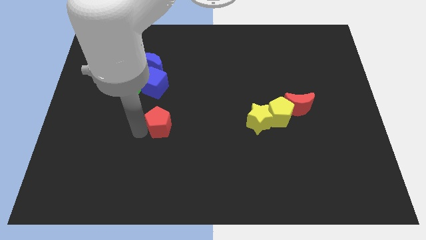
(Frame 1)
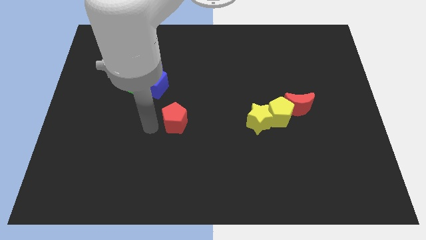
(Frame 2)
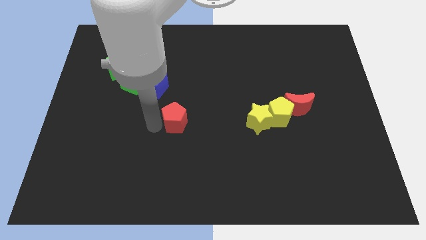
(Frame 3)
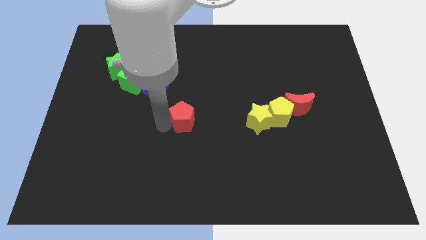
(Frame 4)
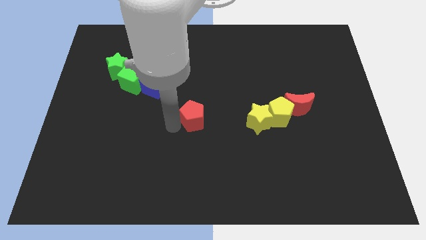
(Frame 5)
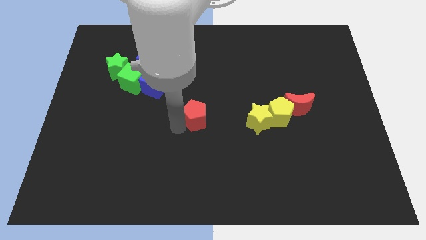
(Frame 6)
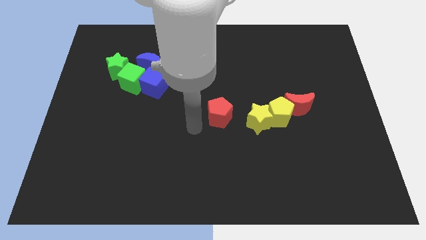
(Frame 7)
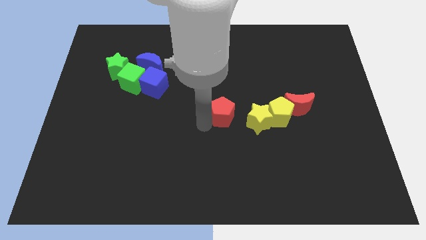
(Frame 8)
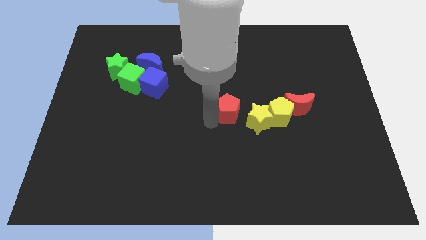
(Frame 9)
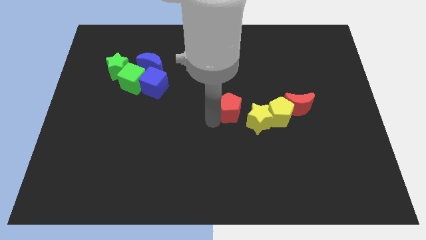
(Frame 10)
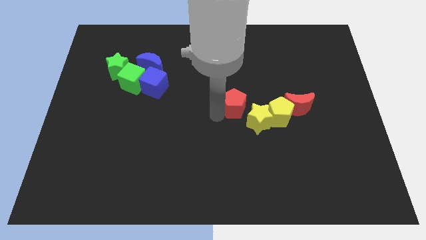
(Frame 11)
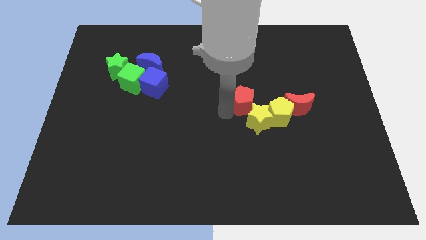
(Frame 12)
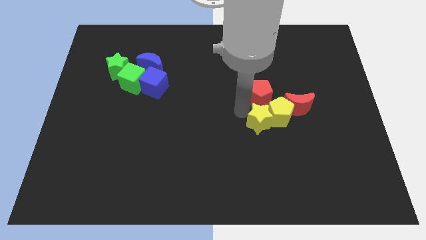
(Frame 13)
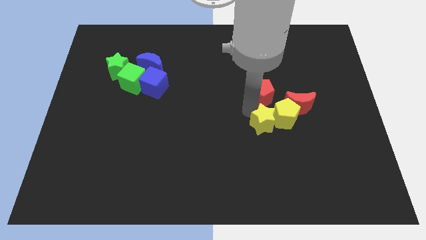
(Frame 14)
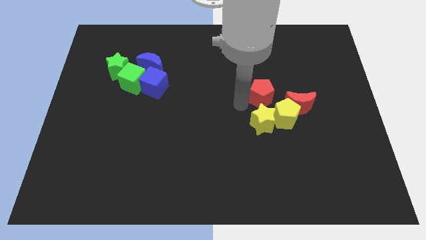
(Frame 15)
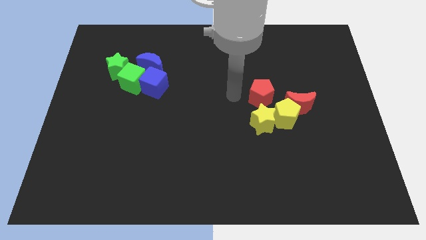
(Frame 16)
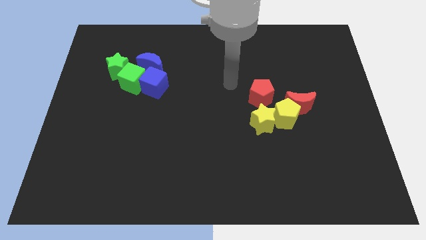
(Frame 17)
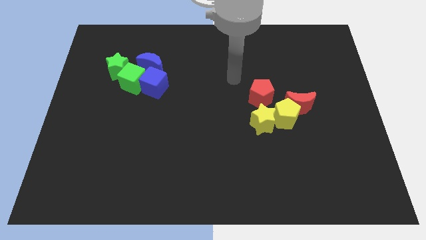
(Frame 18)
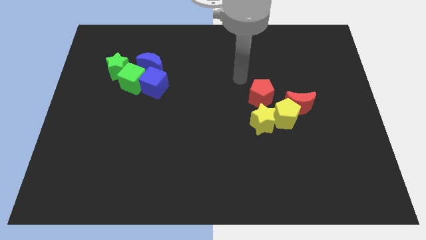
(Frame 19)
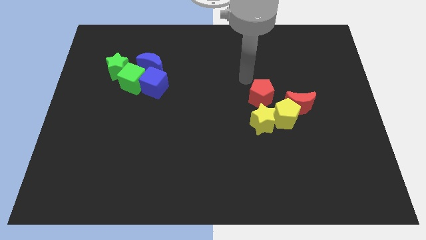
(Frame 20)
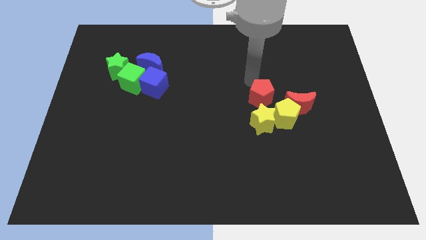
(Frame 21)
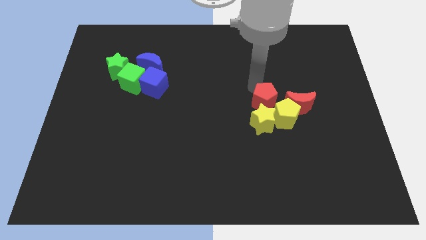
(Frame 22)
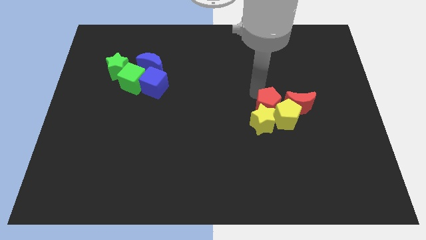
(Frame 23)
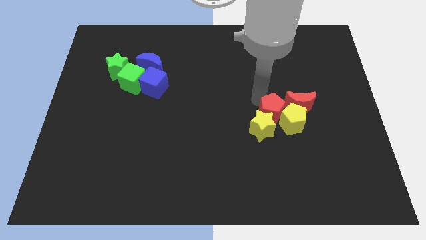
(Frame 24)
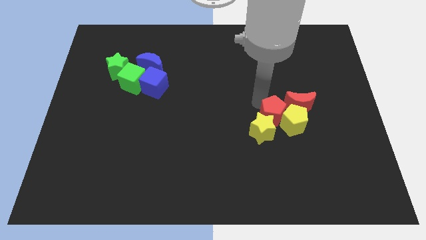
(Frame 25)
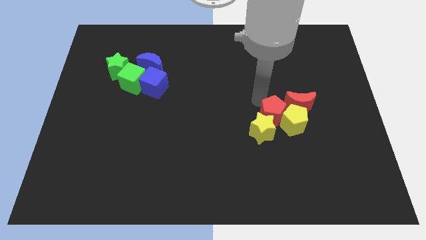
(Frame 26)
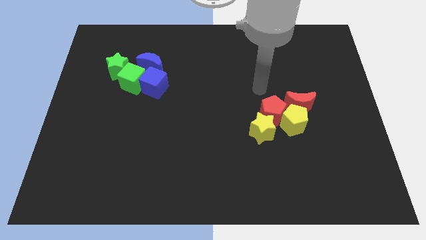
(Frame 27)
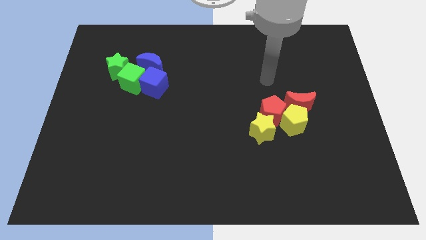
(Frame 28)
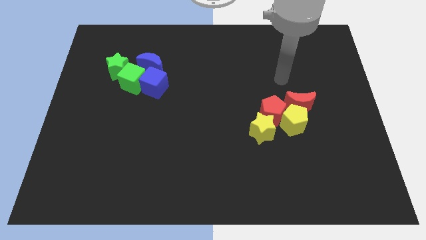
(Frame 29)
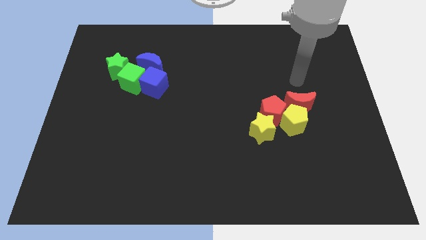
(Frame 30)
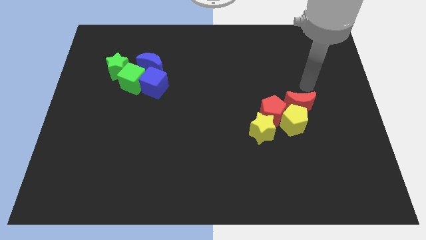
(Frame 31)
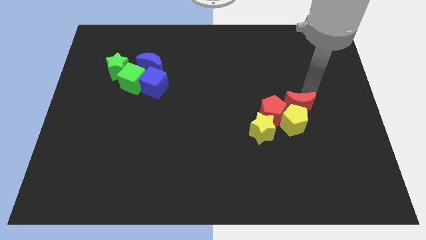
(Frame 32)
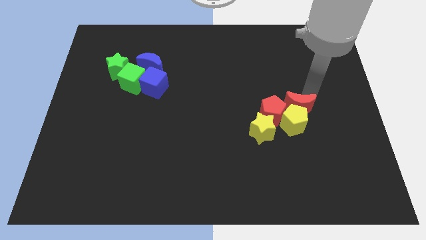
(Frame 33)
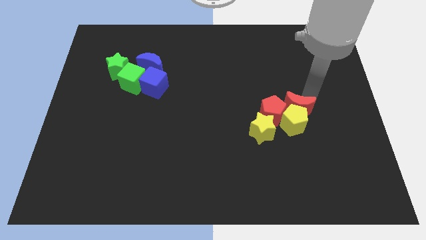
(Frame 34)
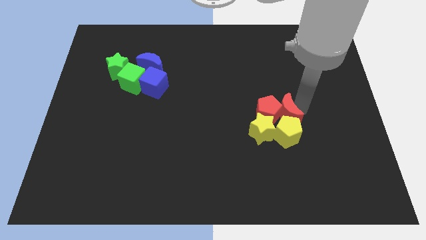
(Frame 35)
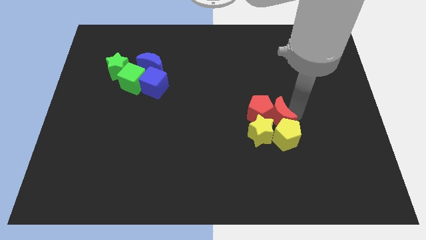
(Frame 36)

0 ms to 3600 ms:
place the red pentagon diagonally to the yellow pentagon

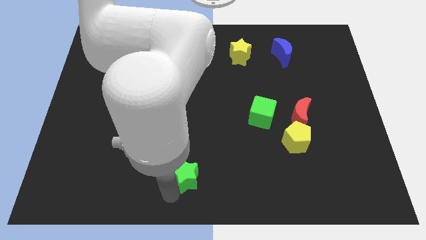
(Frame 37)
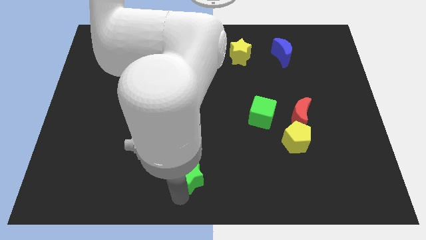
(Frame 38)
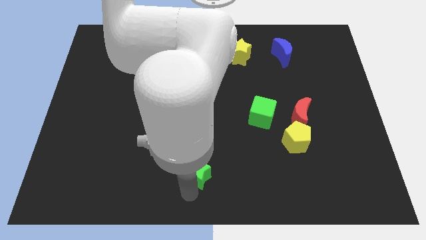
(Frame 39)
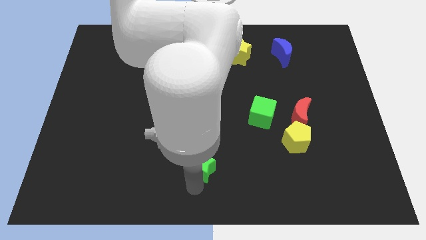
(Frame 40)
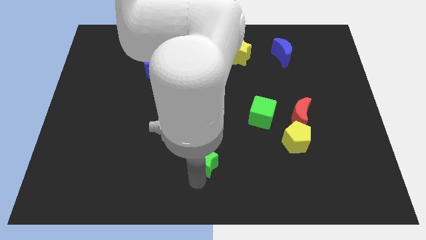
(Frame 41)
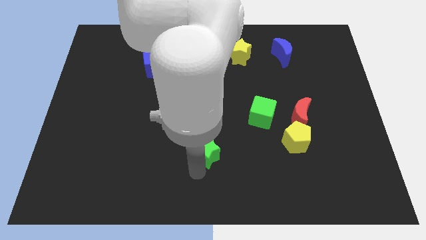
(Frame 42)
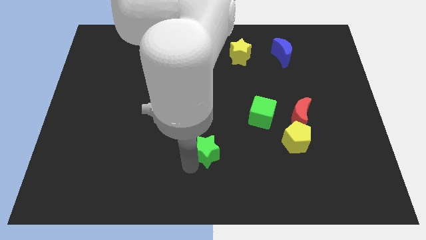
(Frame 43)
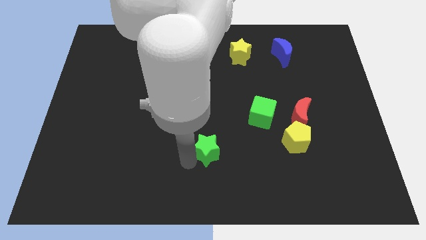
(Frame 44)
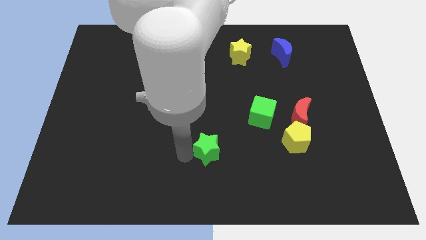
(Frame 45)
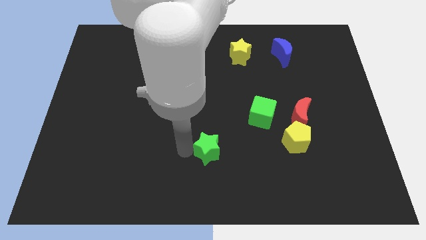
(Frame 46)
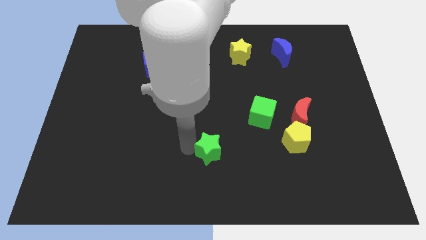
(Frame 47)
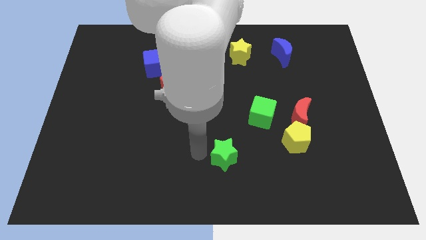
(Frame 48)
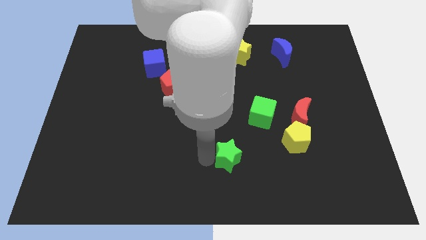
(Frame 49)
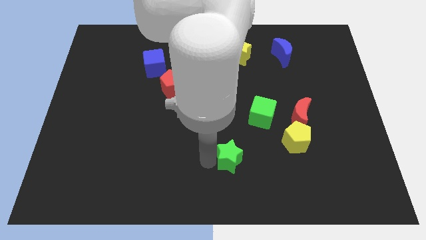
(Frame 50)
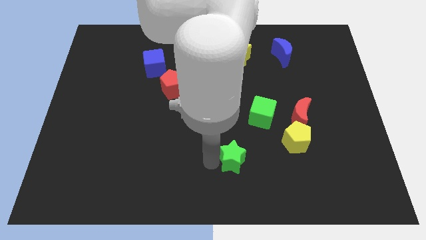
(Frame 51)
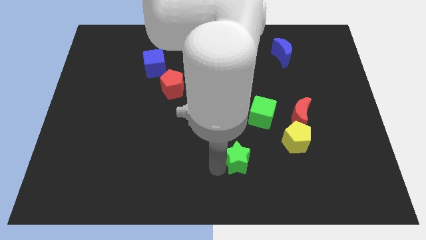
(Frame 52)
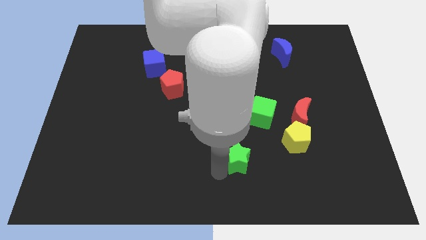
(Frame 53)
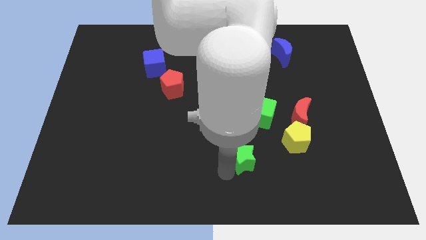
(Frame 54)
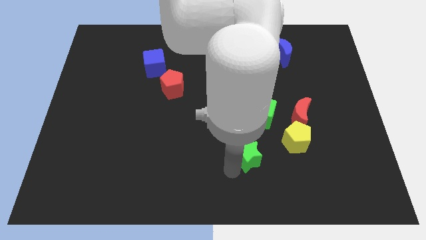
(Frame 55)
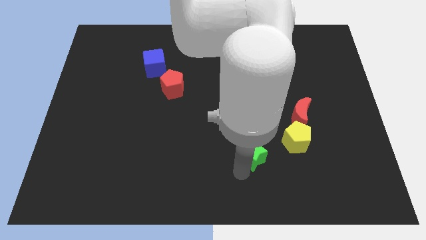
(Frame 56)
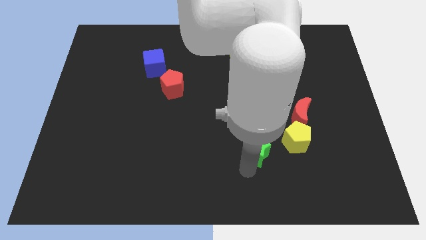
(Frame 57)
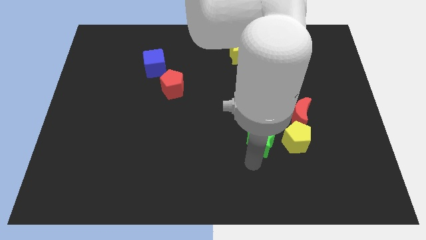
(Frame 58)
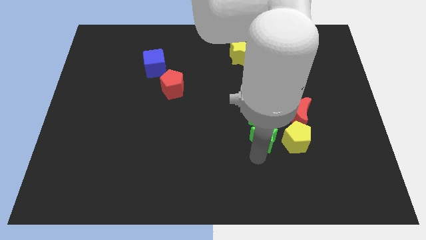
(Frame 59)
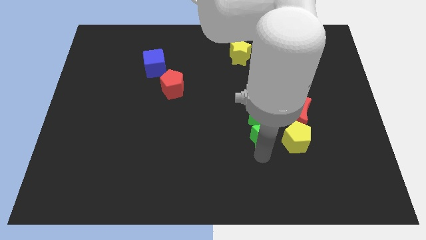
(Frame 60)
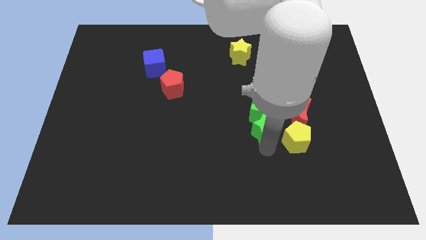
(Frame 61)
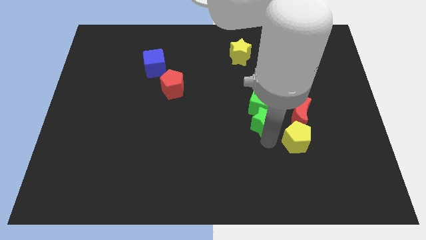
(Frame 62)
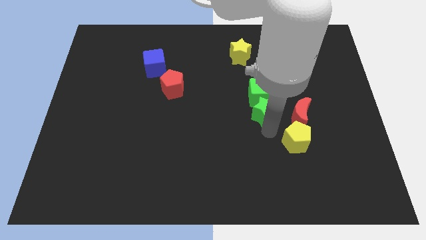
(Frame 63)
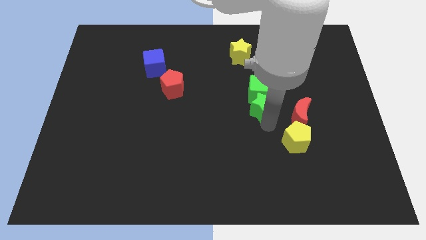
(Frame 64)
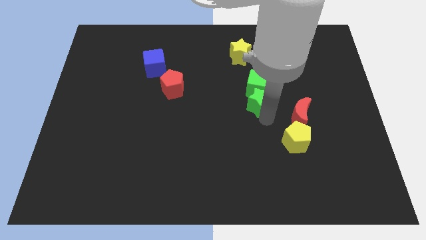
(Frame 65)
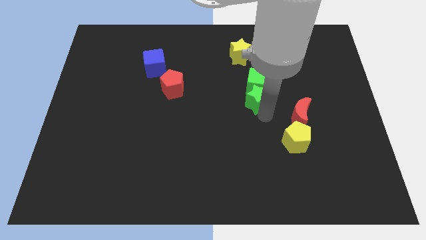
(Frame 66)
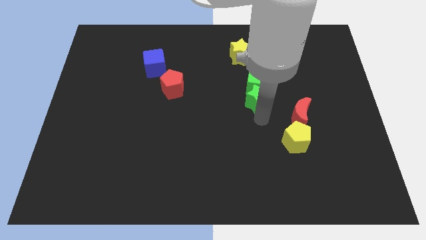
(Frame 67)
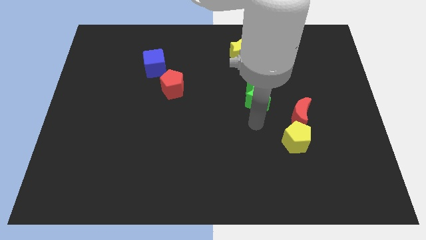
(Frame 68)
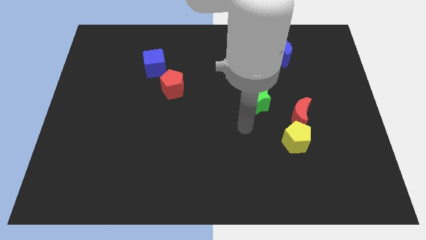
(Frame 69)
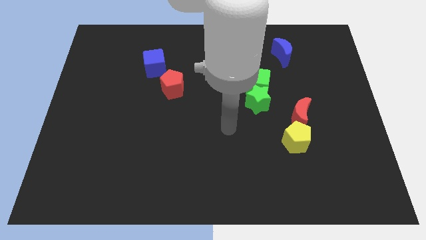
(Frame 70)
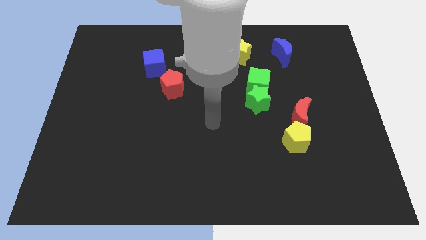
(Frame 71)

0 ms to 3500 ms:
push the green star into the green cube towards up

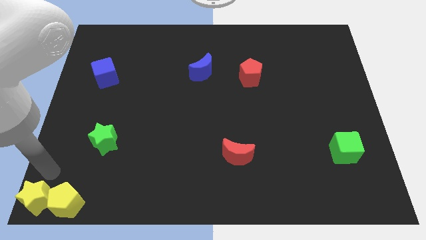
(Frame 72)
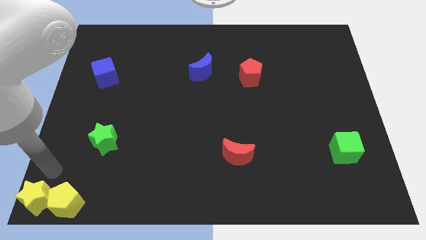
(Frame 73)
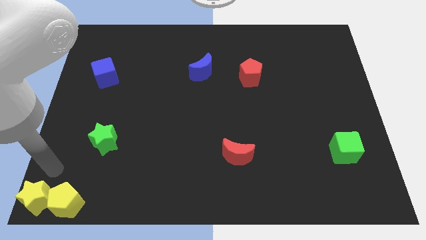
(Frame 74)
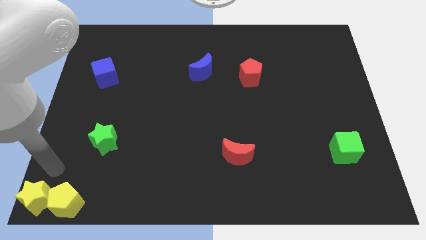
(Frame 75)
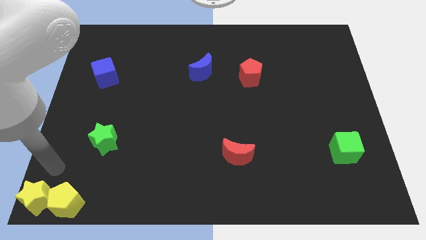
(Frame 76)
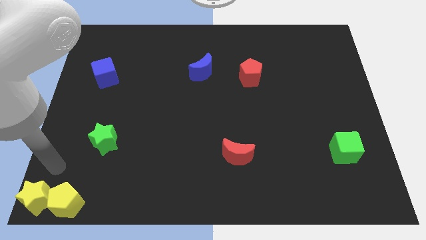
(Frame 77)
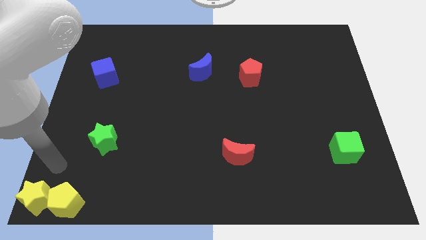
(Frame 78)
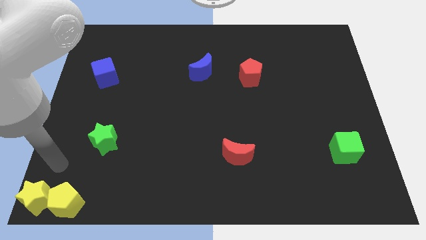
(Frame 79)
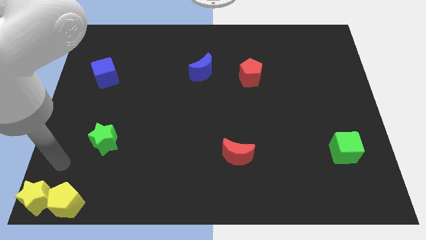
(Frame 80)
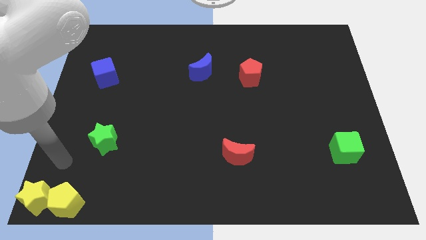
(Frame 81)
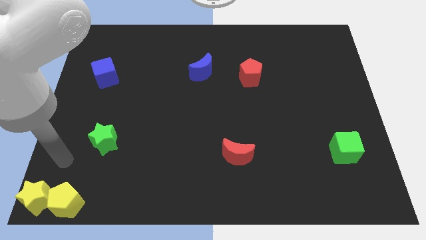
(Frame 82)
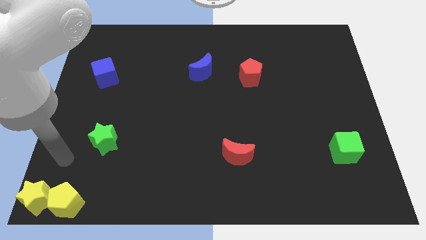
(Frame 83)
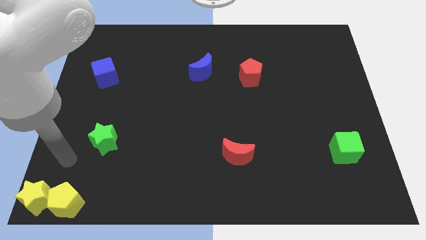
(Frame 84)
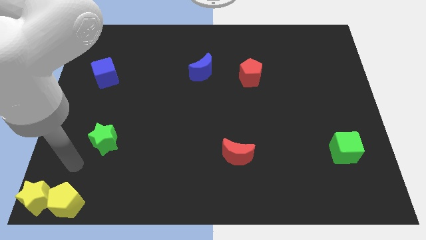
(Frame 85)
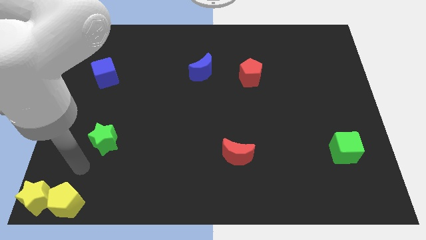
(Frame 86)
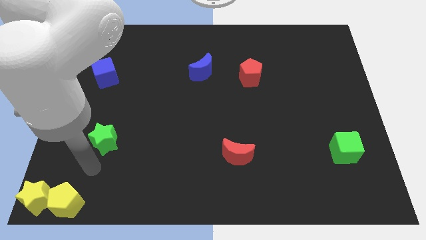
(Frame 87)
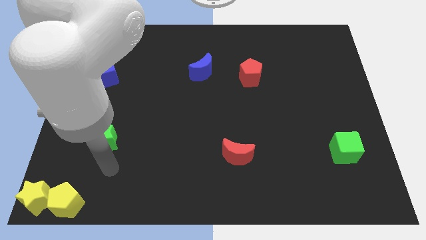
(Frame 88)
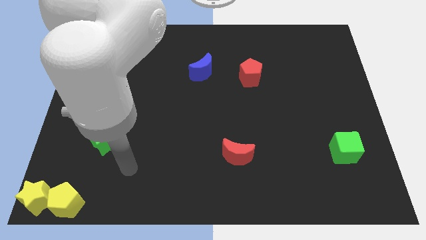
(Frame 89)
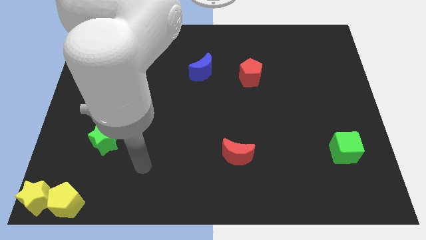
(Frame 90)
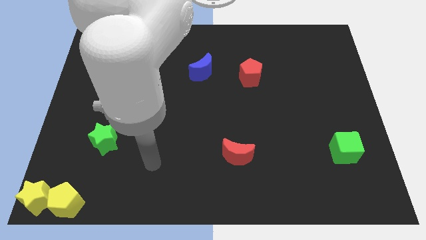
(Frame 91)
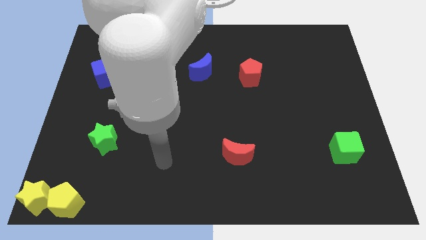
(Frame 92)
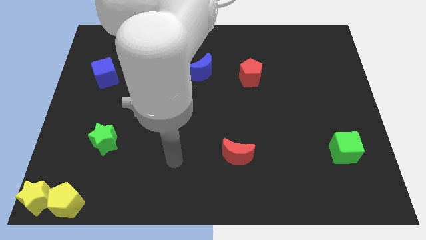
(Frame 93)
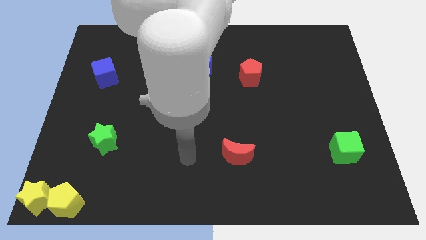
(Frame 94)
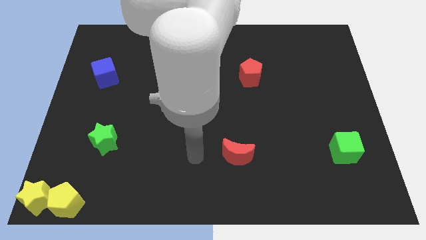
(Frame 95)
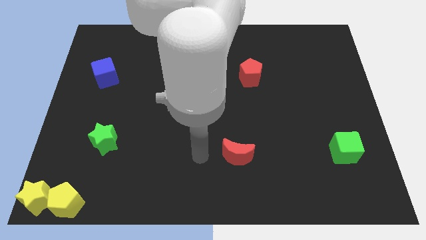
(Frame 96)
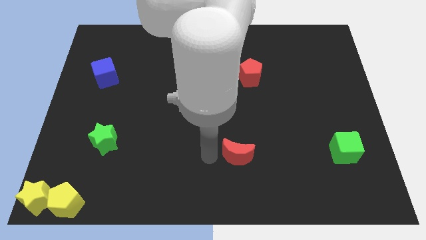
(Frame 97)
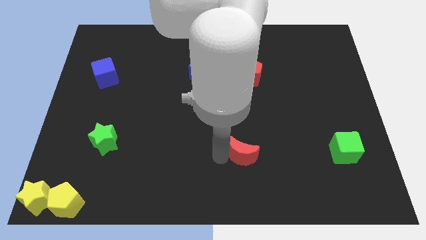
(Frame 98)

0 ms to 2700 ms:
move the arm left to the red crescent
